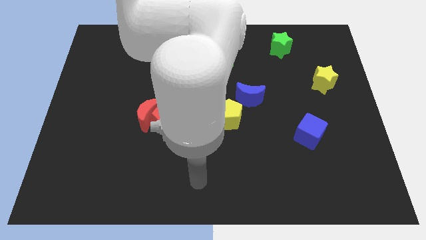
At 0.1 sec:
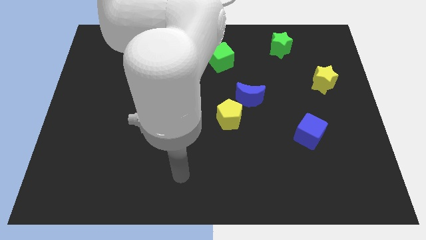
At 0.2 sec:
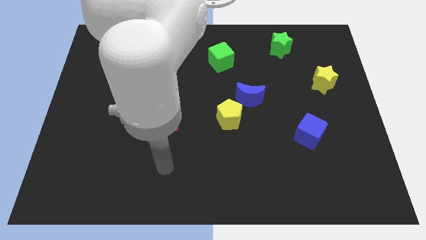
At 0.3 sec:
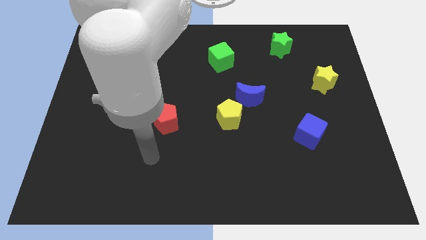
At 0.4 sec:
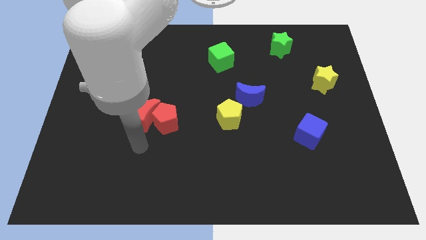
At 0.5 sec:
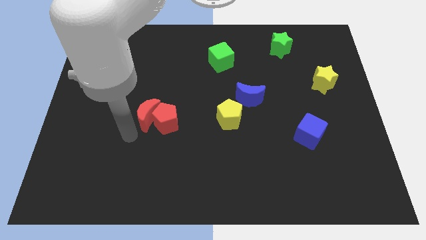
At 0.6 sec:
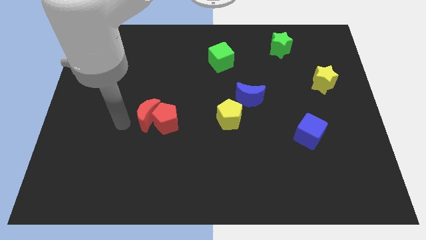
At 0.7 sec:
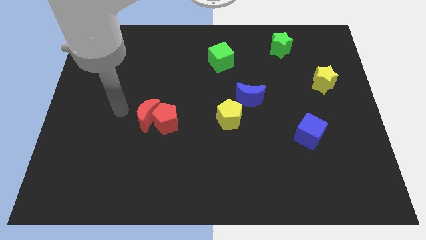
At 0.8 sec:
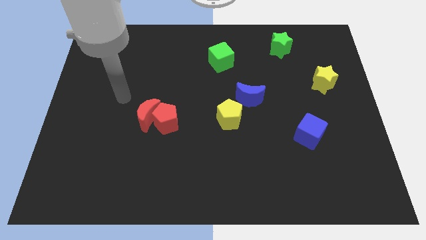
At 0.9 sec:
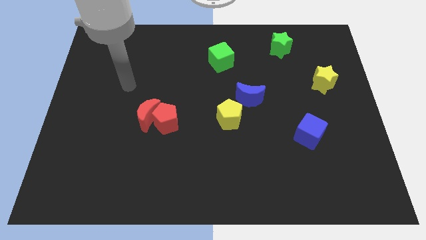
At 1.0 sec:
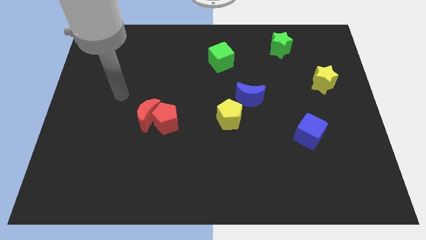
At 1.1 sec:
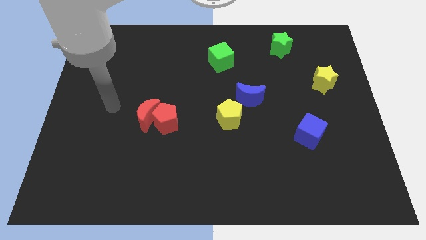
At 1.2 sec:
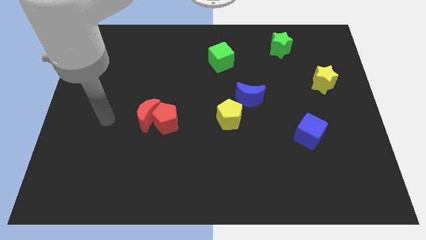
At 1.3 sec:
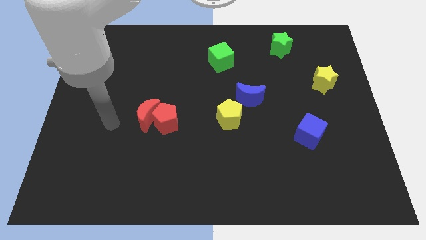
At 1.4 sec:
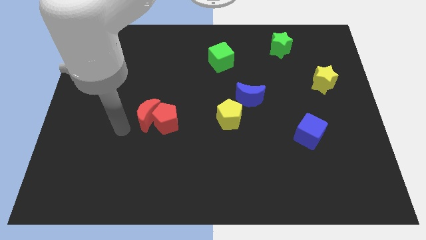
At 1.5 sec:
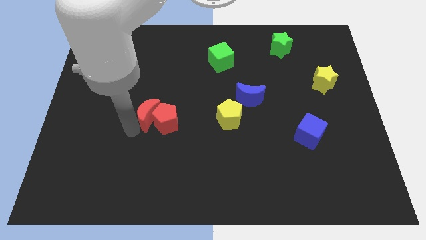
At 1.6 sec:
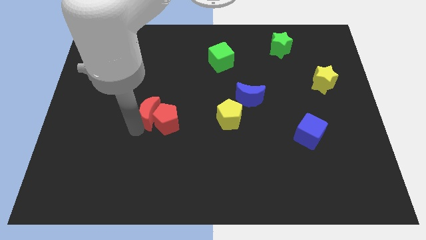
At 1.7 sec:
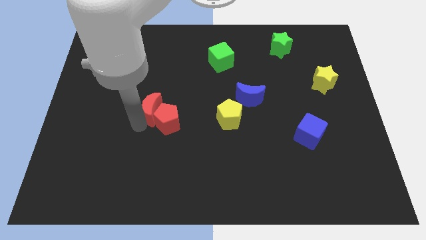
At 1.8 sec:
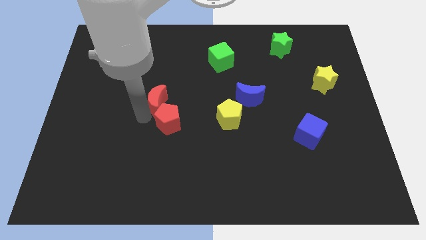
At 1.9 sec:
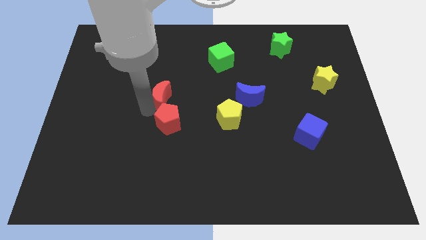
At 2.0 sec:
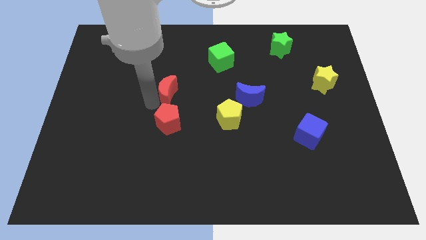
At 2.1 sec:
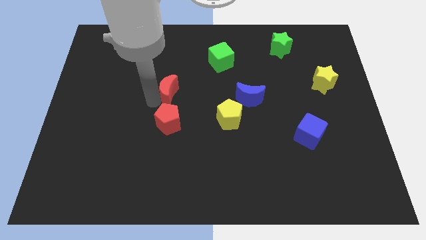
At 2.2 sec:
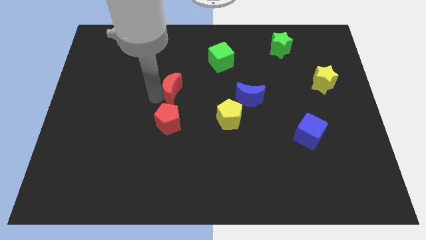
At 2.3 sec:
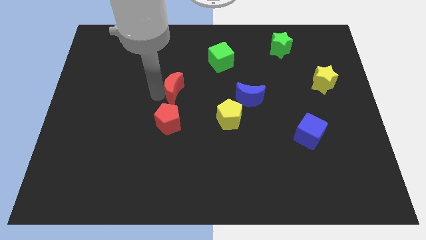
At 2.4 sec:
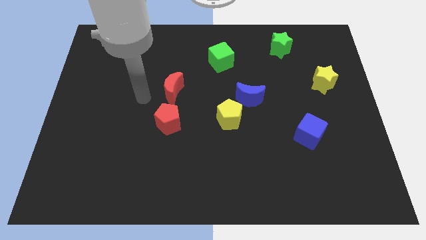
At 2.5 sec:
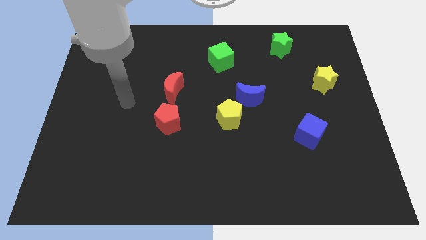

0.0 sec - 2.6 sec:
move red moon on top of red pentagon

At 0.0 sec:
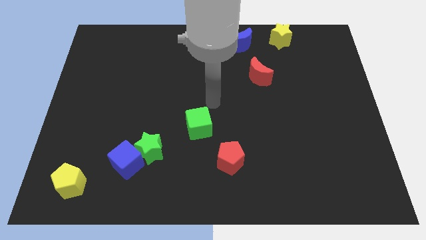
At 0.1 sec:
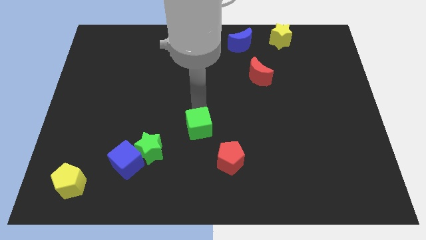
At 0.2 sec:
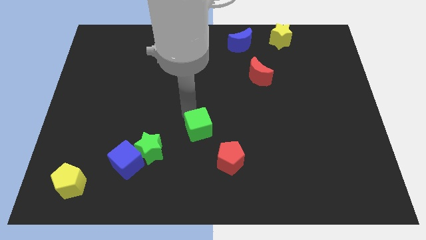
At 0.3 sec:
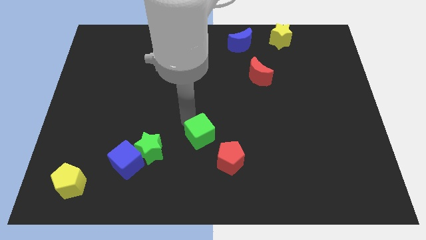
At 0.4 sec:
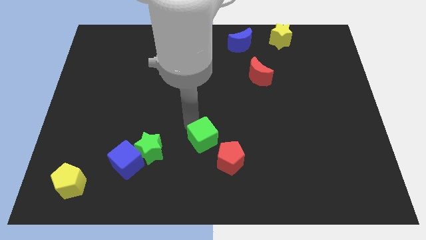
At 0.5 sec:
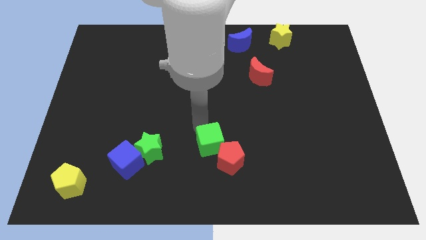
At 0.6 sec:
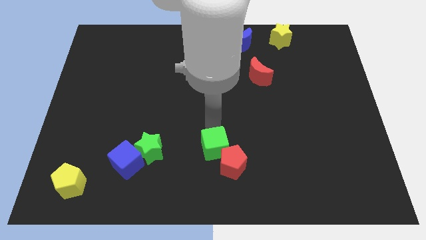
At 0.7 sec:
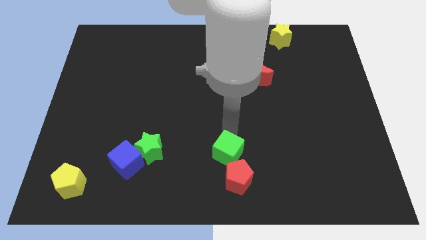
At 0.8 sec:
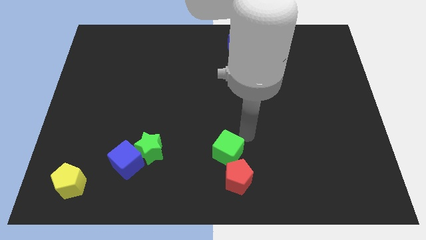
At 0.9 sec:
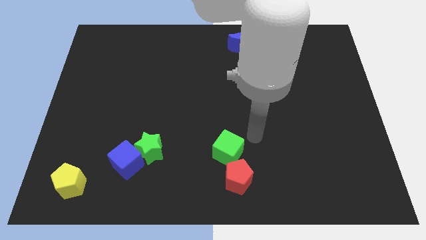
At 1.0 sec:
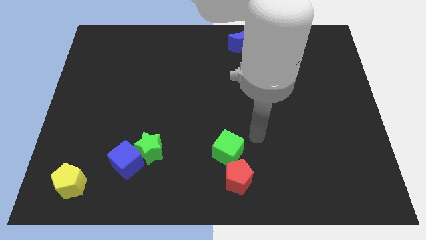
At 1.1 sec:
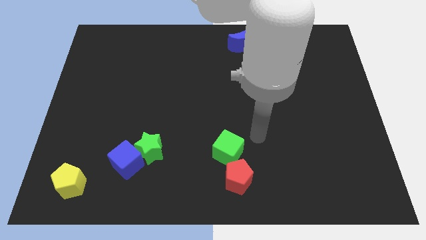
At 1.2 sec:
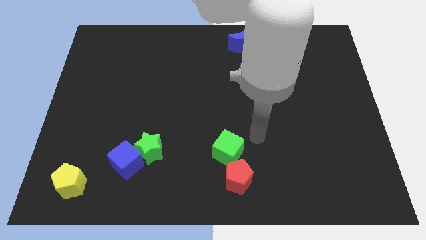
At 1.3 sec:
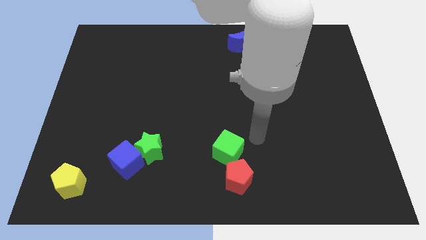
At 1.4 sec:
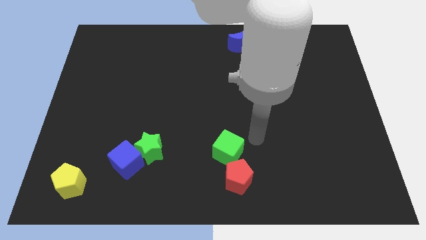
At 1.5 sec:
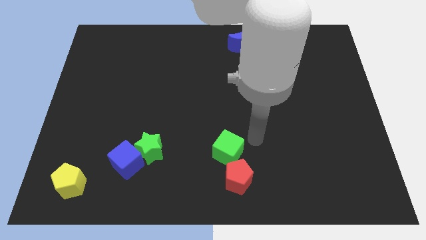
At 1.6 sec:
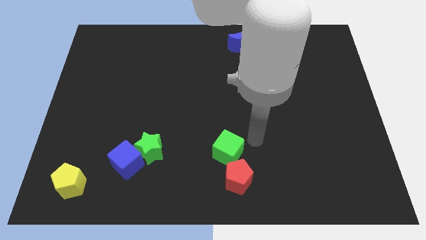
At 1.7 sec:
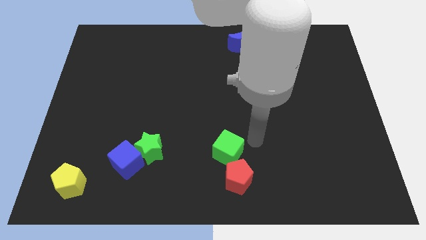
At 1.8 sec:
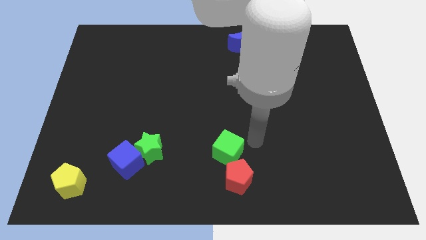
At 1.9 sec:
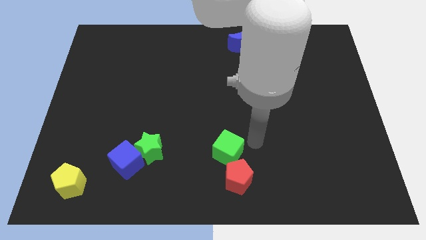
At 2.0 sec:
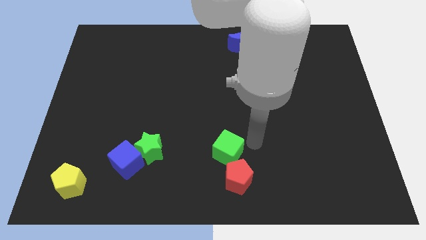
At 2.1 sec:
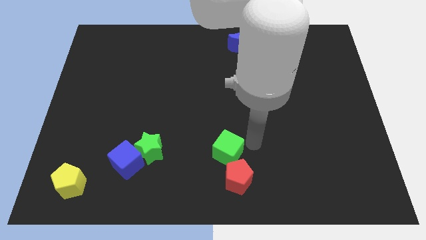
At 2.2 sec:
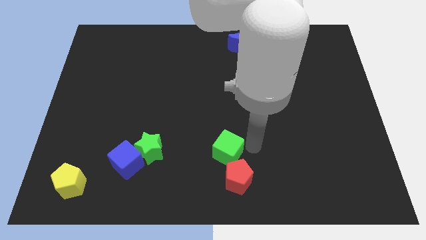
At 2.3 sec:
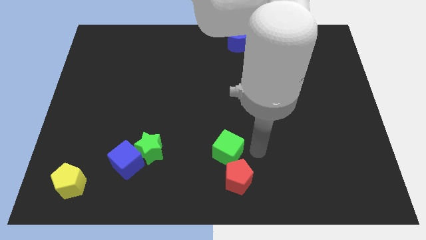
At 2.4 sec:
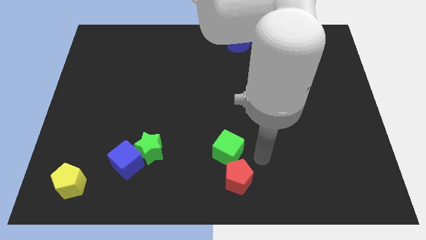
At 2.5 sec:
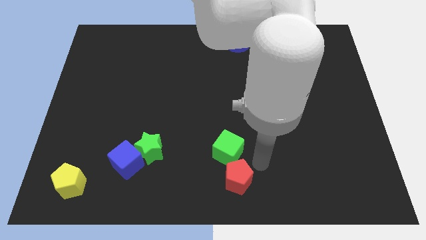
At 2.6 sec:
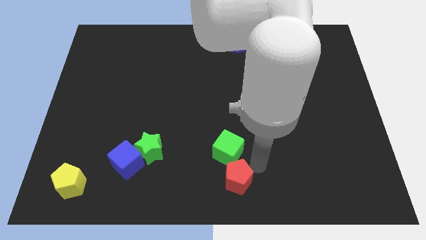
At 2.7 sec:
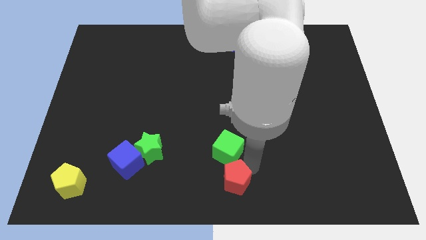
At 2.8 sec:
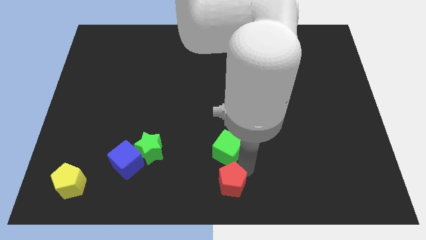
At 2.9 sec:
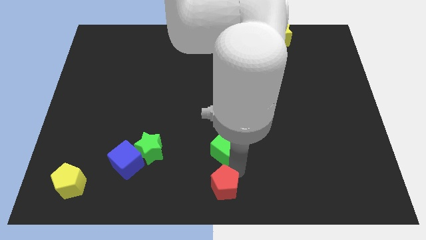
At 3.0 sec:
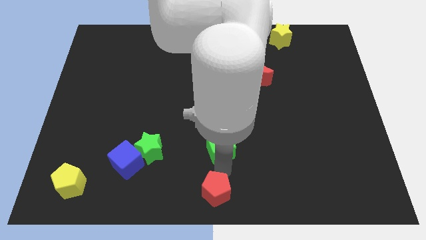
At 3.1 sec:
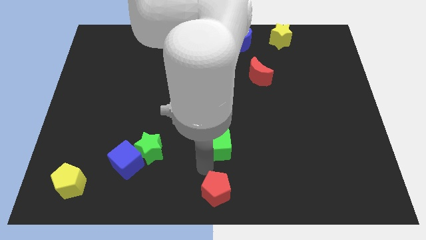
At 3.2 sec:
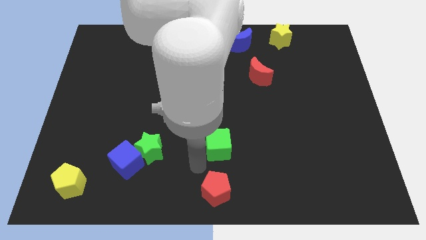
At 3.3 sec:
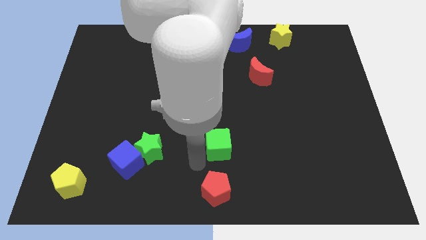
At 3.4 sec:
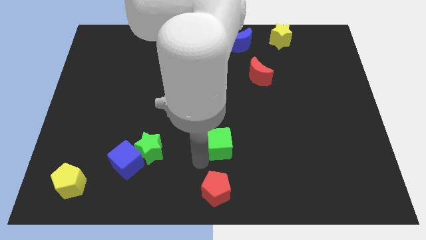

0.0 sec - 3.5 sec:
slide the green cube and red pentagon vertical to each other

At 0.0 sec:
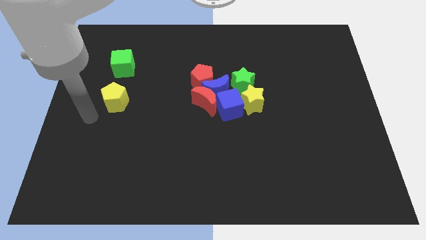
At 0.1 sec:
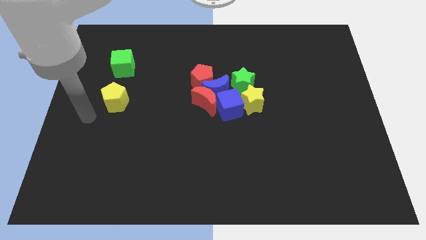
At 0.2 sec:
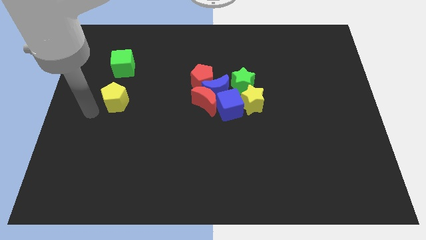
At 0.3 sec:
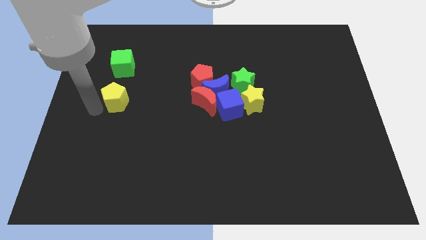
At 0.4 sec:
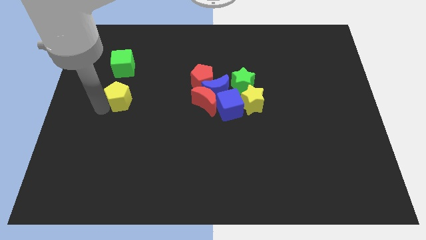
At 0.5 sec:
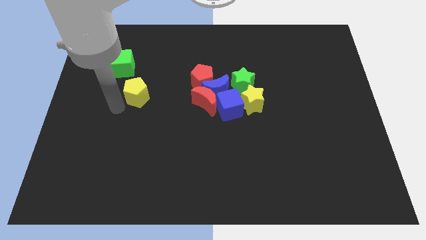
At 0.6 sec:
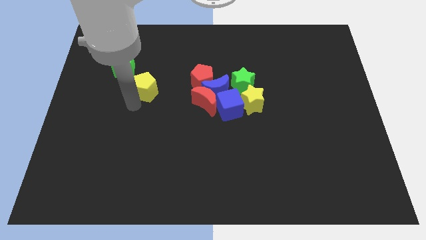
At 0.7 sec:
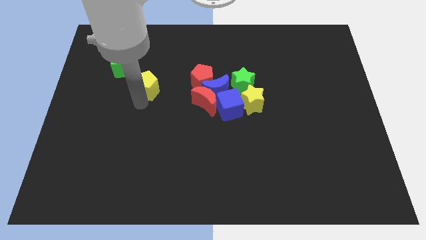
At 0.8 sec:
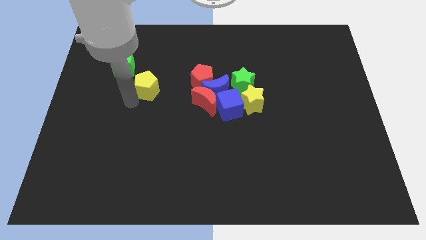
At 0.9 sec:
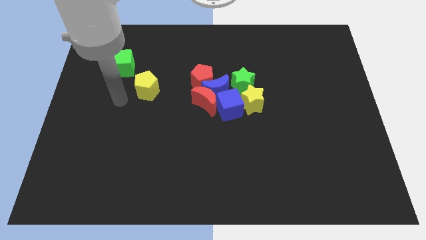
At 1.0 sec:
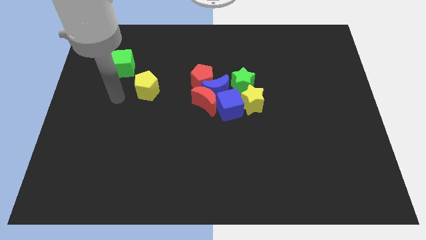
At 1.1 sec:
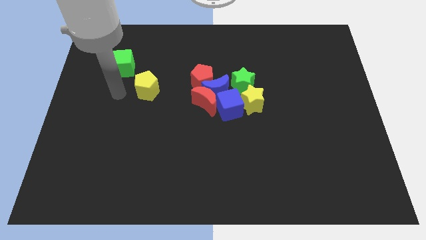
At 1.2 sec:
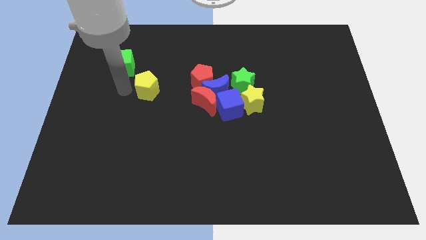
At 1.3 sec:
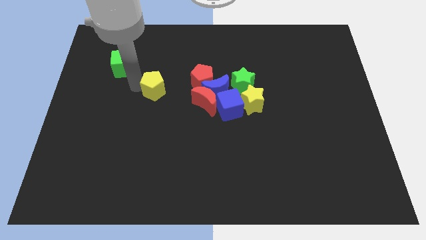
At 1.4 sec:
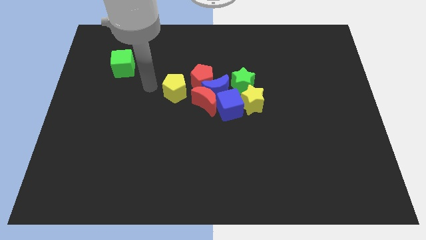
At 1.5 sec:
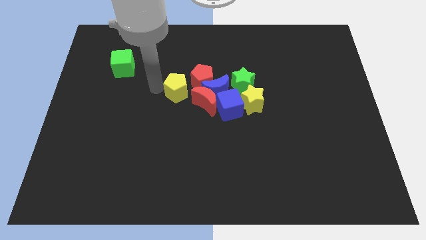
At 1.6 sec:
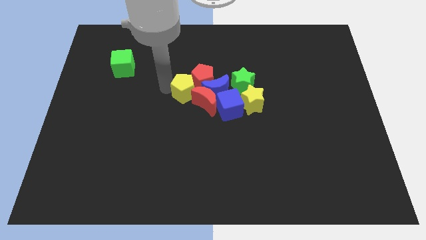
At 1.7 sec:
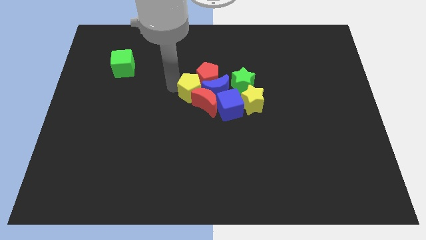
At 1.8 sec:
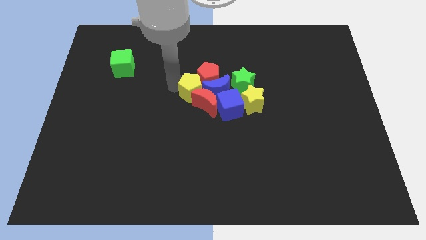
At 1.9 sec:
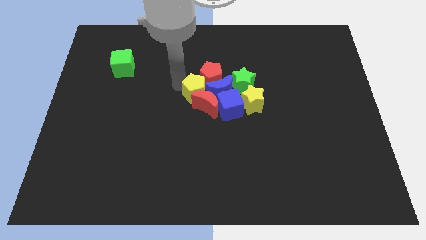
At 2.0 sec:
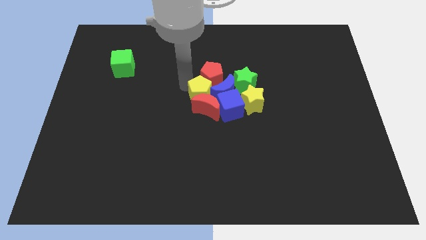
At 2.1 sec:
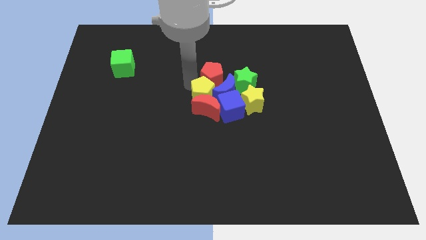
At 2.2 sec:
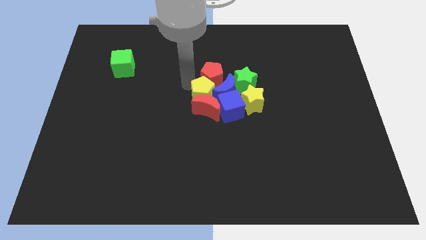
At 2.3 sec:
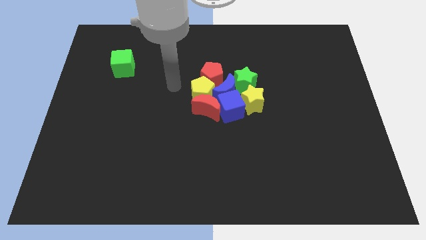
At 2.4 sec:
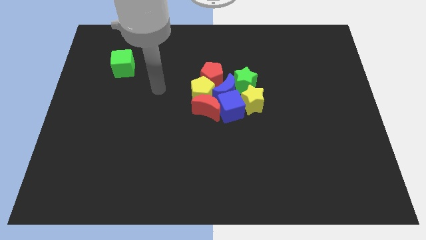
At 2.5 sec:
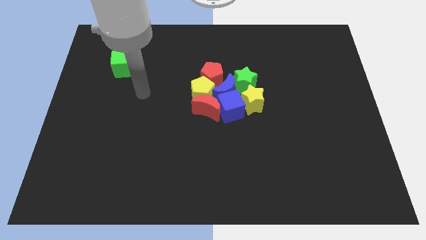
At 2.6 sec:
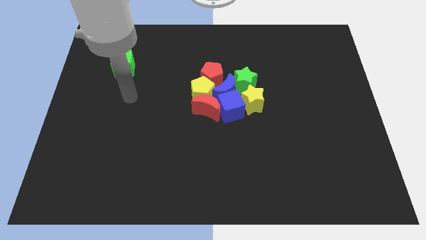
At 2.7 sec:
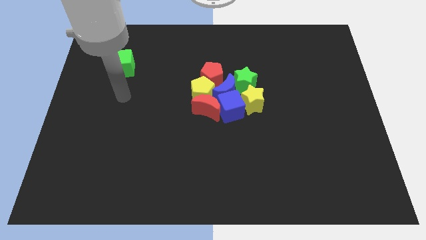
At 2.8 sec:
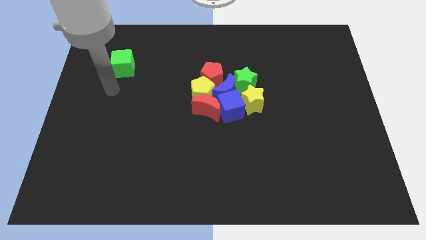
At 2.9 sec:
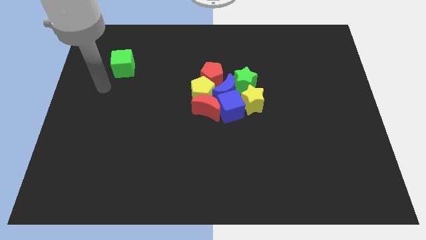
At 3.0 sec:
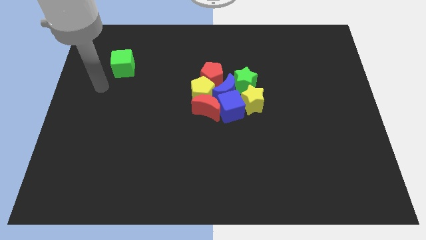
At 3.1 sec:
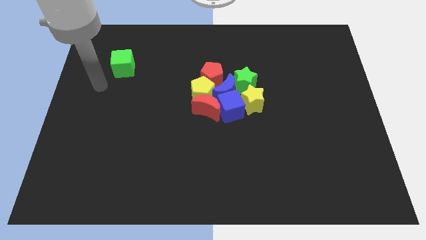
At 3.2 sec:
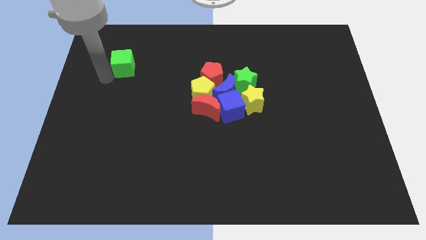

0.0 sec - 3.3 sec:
place the yellow pentagon above the red moon
